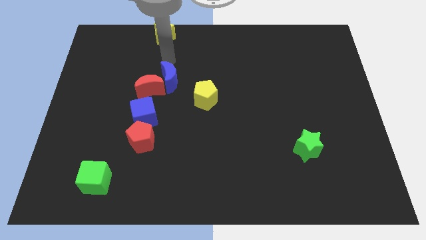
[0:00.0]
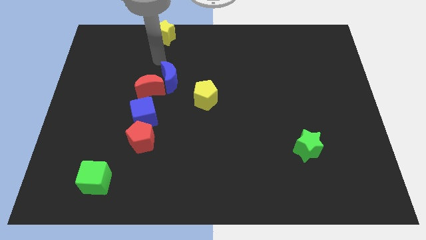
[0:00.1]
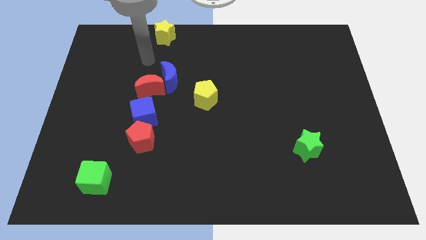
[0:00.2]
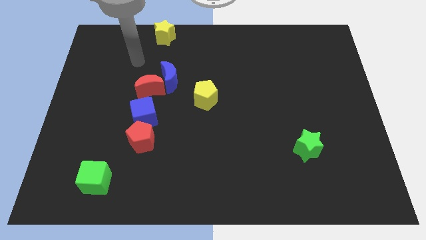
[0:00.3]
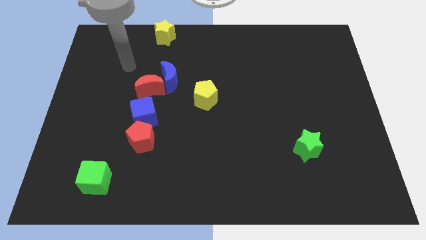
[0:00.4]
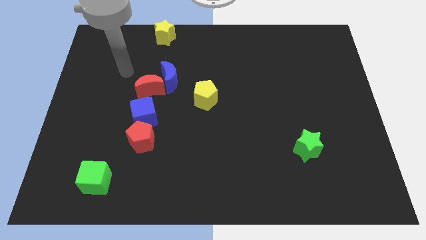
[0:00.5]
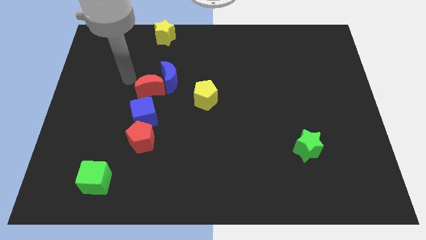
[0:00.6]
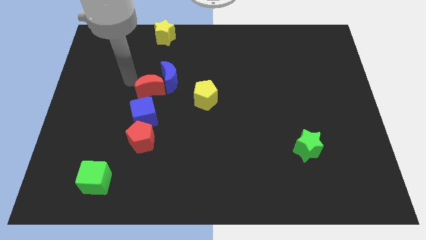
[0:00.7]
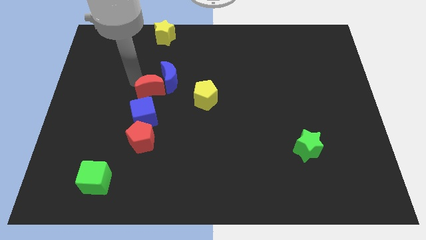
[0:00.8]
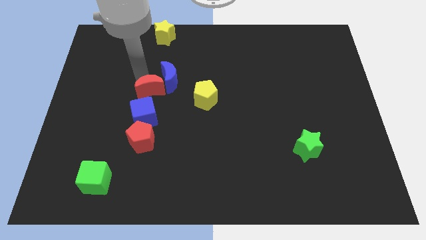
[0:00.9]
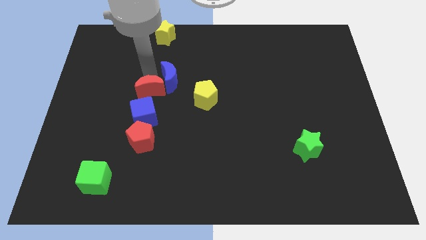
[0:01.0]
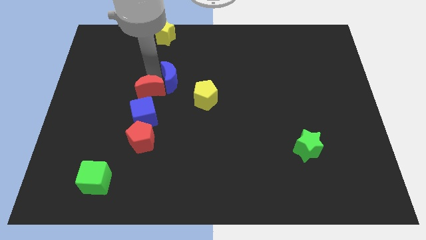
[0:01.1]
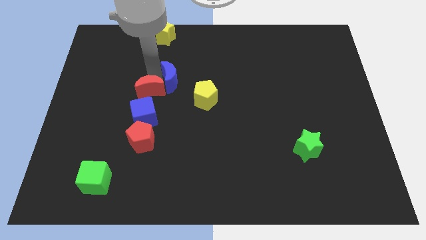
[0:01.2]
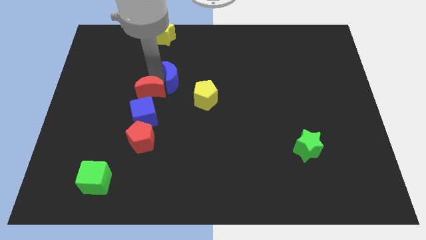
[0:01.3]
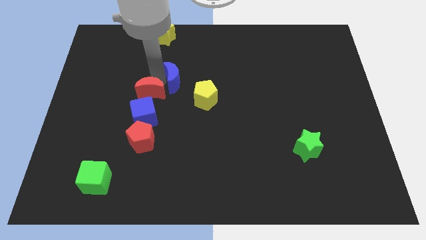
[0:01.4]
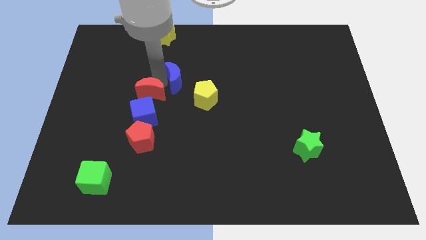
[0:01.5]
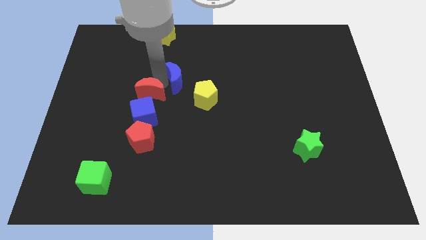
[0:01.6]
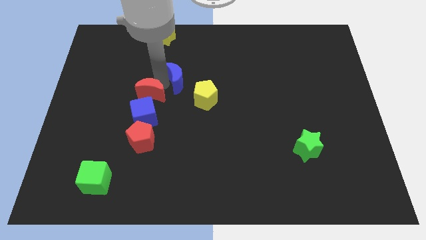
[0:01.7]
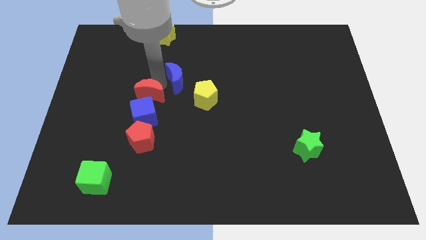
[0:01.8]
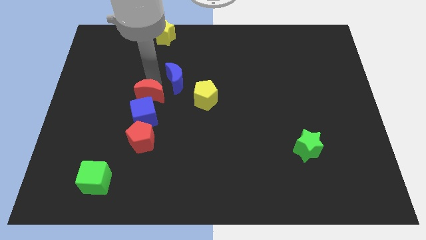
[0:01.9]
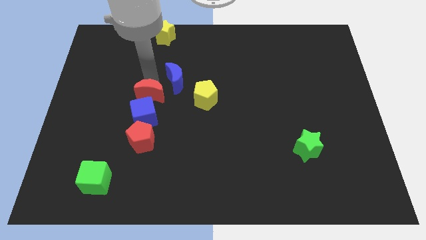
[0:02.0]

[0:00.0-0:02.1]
separate blue and red moons from each other

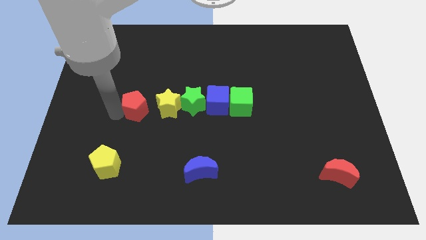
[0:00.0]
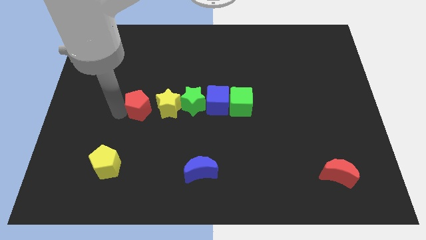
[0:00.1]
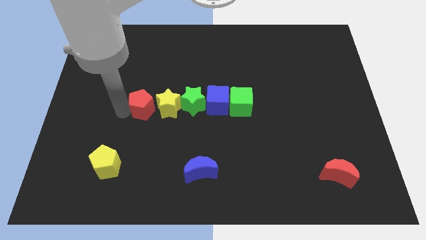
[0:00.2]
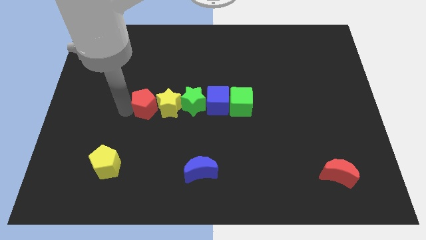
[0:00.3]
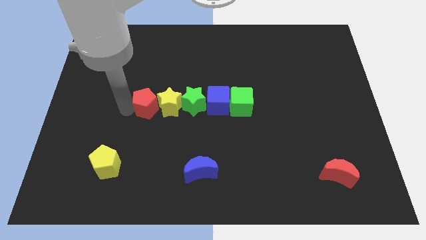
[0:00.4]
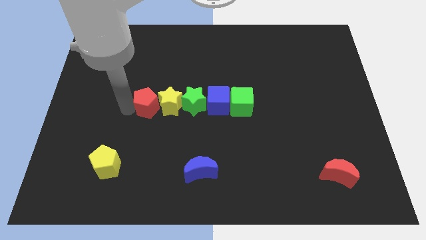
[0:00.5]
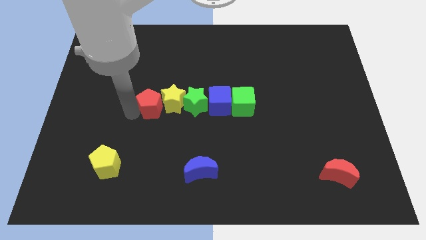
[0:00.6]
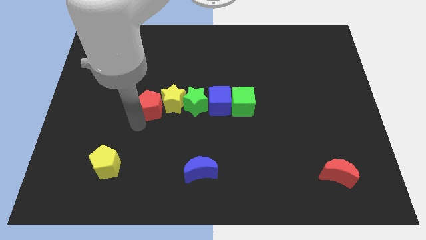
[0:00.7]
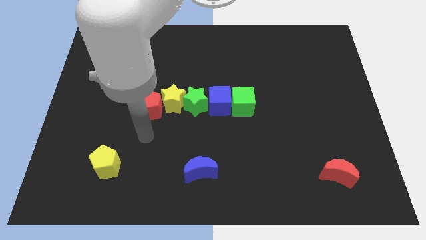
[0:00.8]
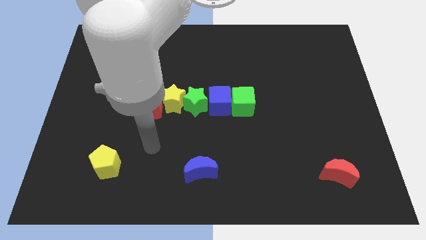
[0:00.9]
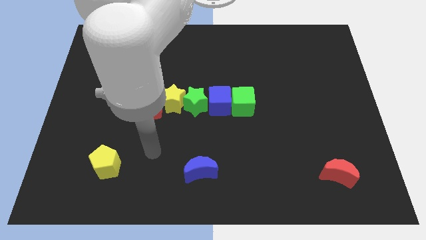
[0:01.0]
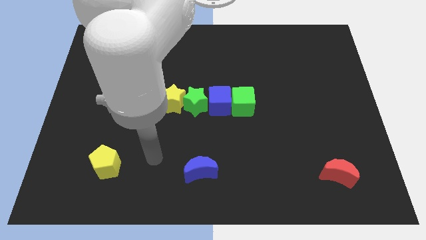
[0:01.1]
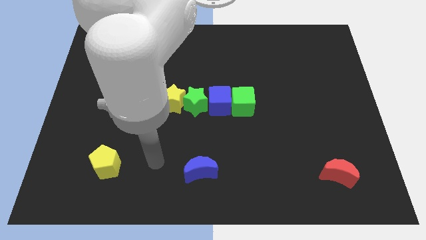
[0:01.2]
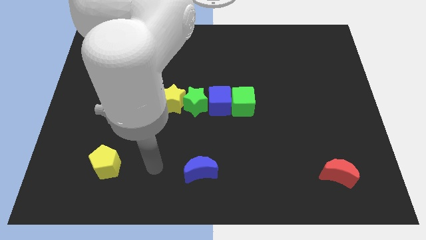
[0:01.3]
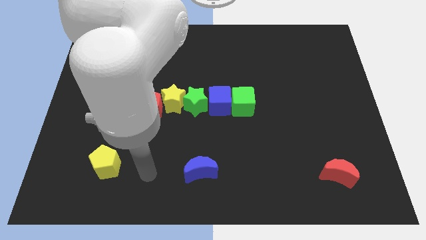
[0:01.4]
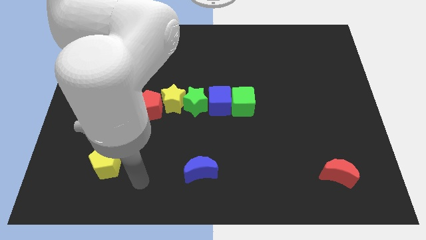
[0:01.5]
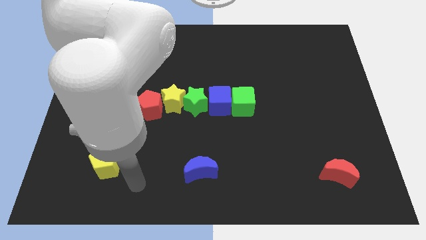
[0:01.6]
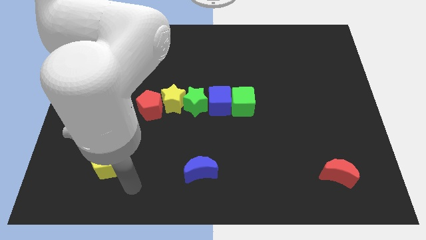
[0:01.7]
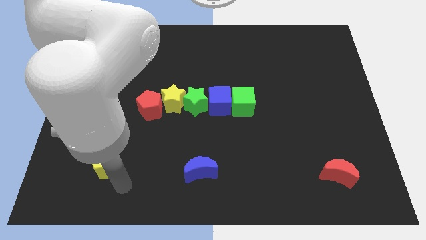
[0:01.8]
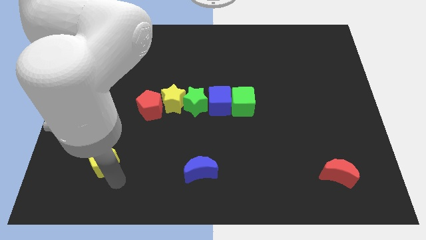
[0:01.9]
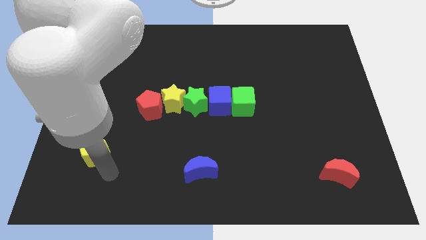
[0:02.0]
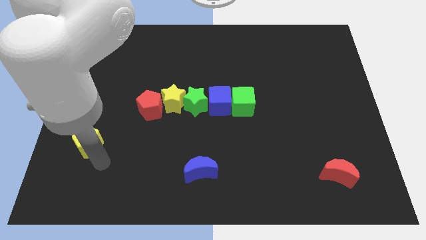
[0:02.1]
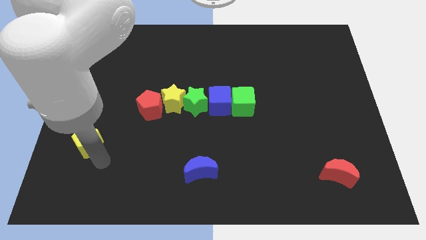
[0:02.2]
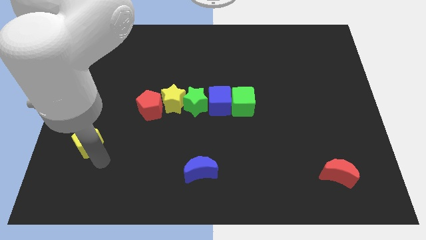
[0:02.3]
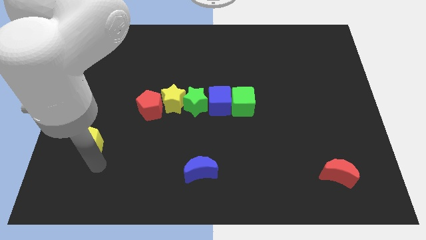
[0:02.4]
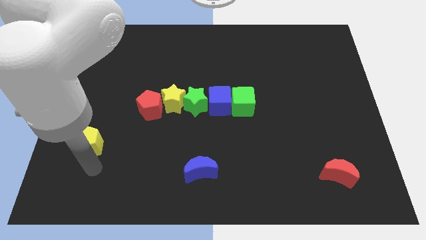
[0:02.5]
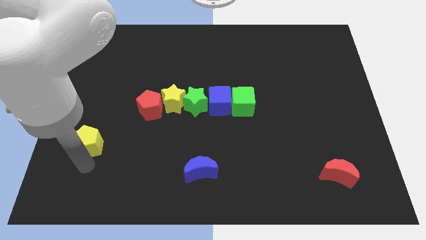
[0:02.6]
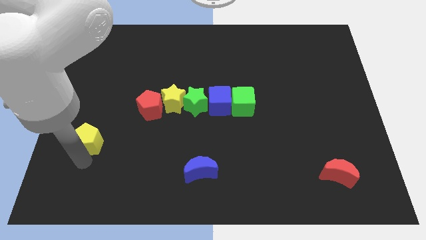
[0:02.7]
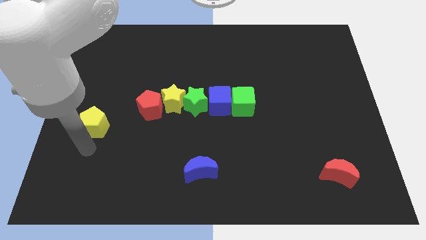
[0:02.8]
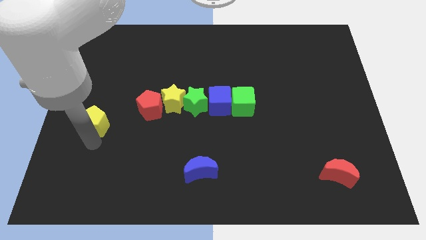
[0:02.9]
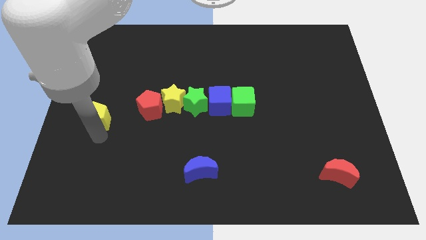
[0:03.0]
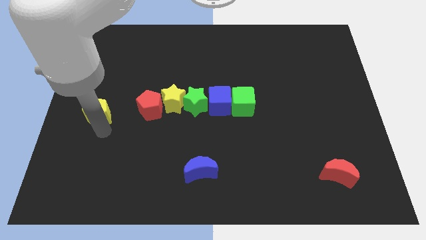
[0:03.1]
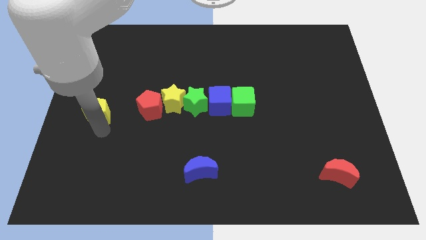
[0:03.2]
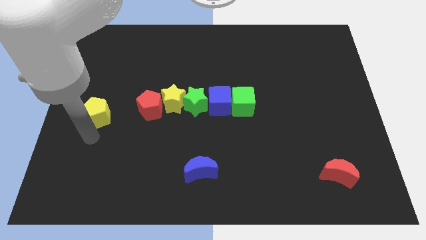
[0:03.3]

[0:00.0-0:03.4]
move the yellow pentagon to the left of the red pentagon

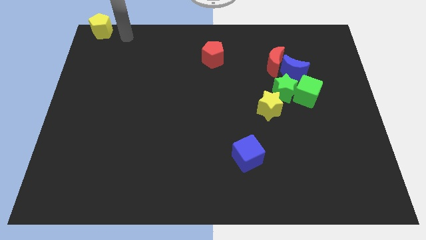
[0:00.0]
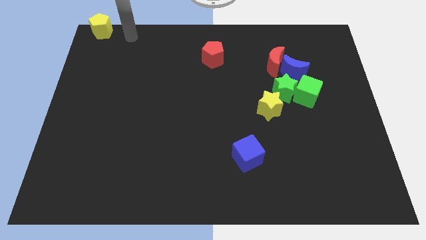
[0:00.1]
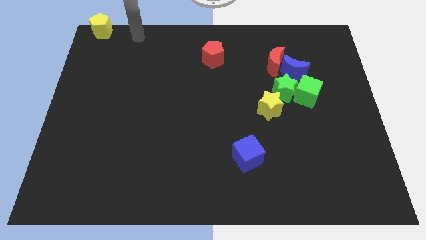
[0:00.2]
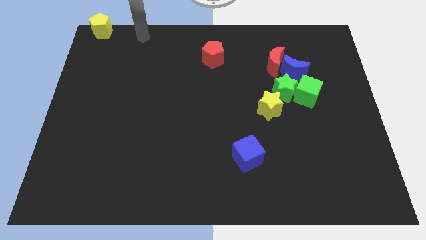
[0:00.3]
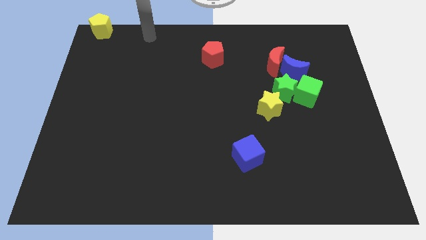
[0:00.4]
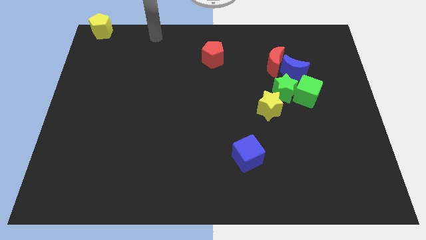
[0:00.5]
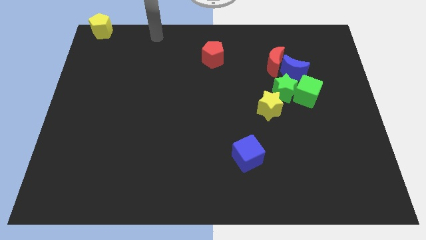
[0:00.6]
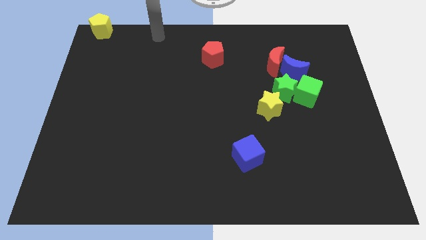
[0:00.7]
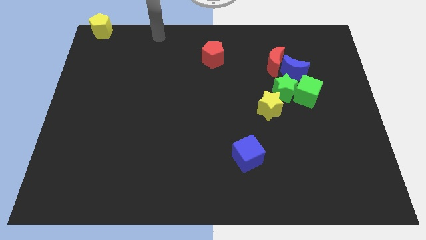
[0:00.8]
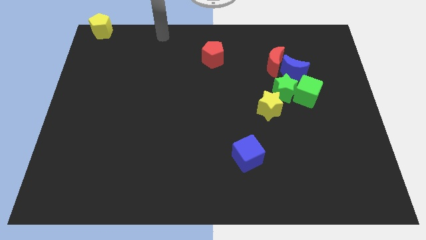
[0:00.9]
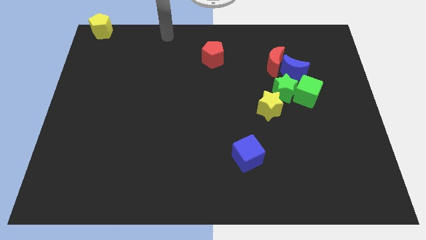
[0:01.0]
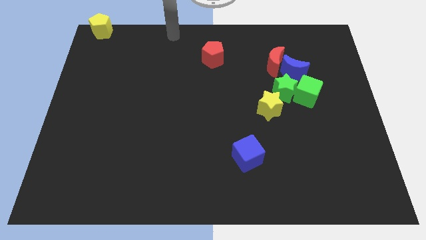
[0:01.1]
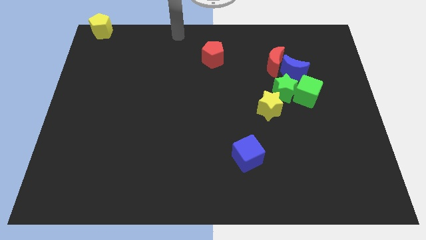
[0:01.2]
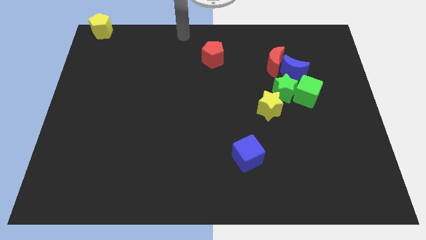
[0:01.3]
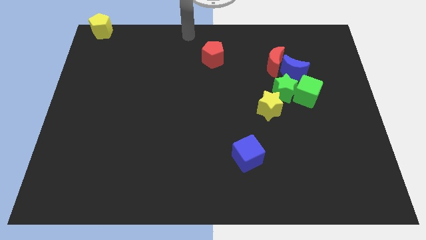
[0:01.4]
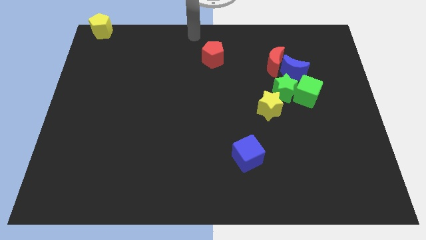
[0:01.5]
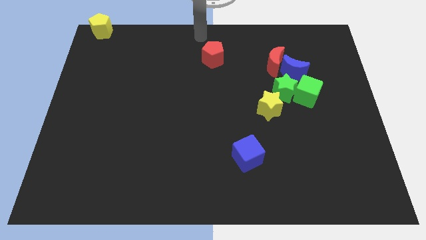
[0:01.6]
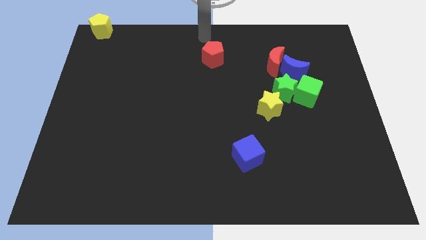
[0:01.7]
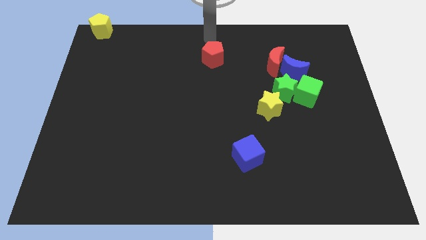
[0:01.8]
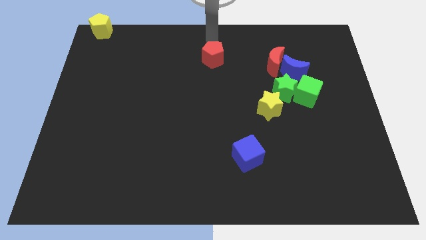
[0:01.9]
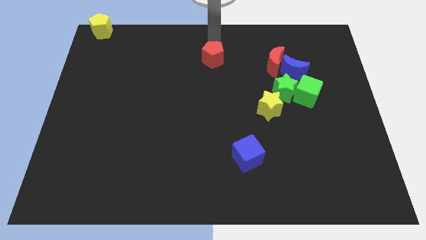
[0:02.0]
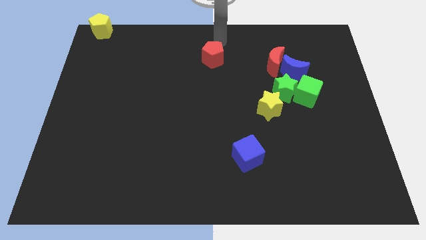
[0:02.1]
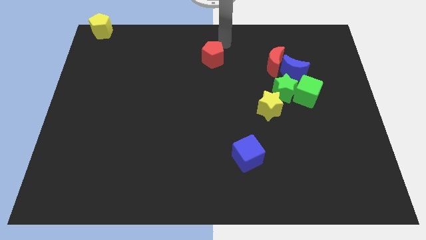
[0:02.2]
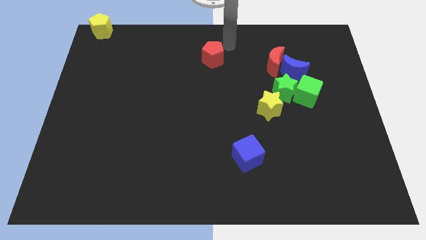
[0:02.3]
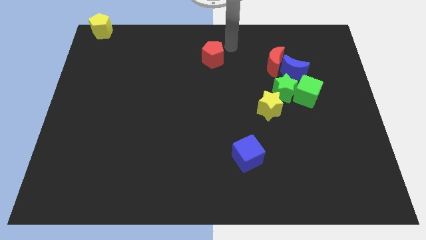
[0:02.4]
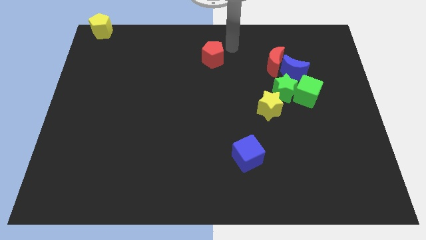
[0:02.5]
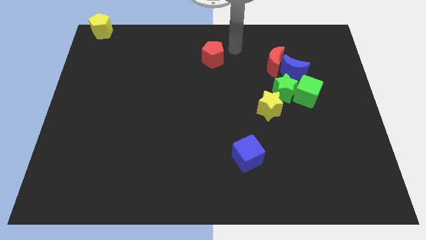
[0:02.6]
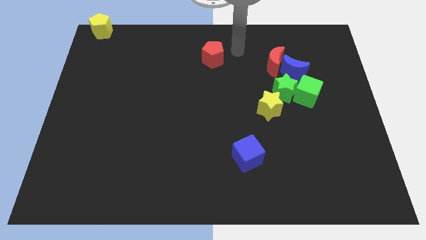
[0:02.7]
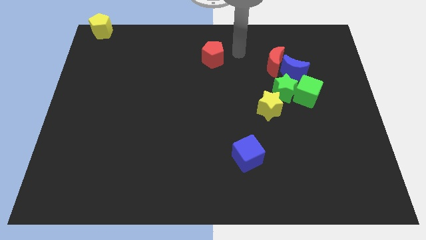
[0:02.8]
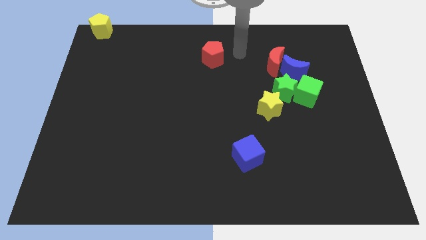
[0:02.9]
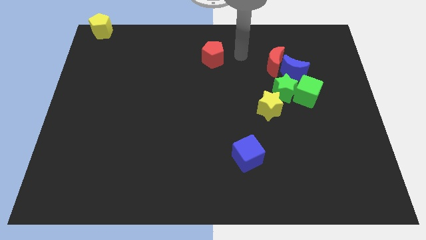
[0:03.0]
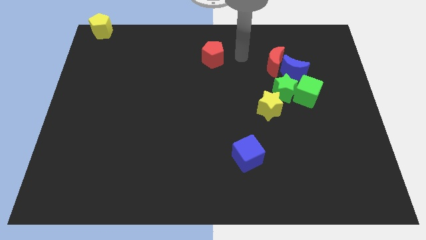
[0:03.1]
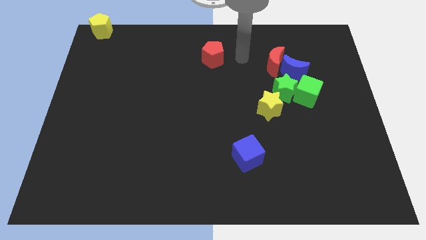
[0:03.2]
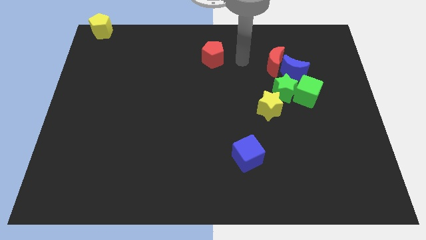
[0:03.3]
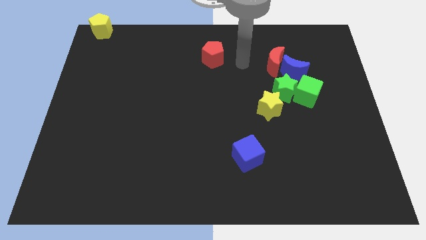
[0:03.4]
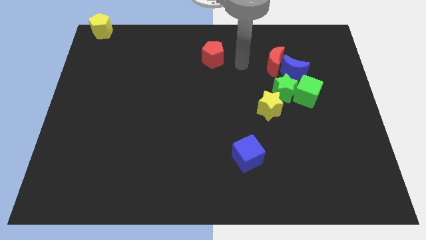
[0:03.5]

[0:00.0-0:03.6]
point your arm at the right of the red pentagon
